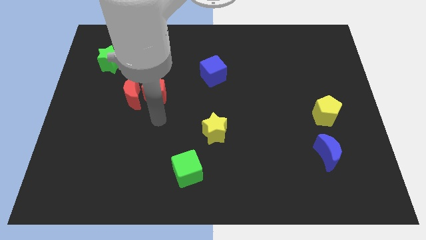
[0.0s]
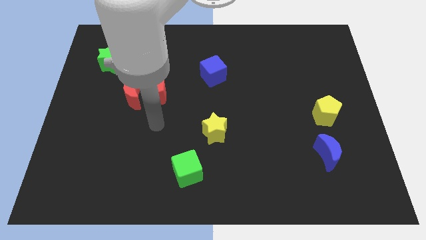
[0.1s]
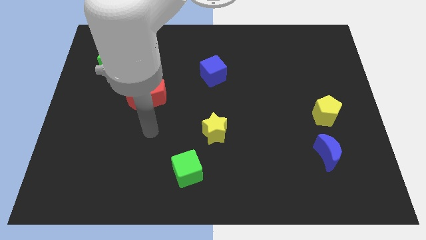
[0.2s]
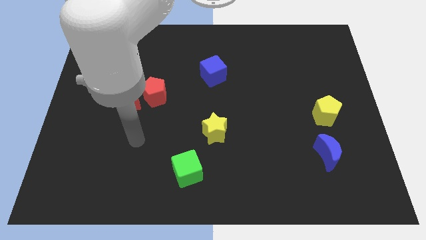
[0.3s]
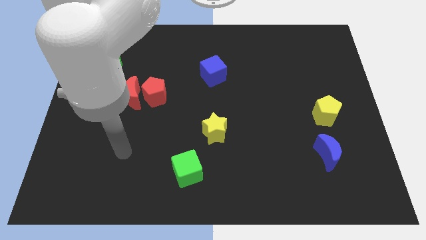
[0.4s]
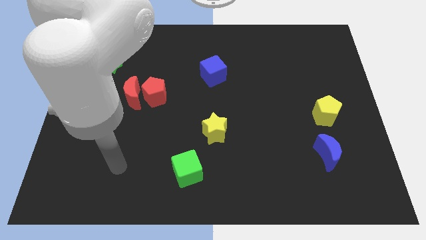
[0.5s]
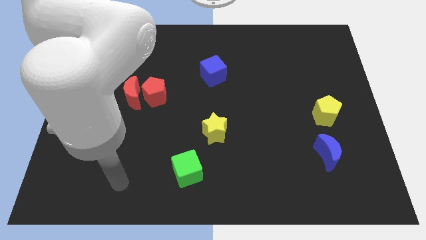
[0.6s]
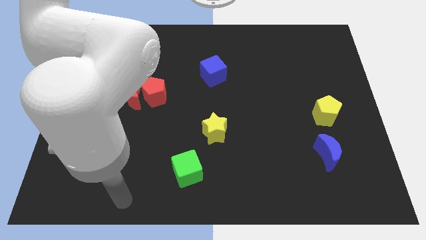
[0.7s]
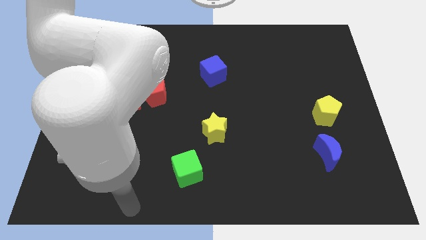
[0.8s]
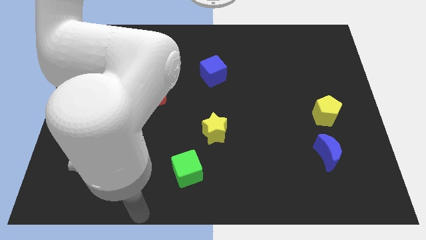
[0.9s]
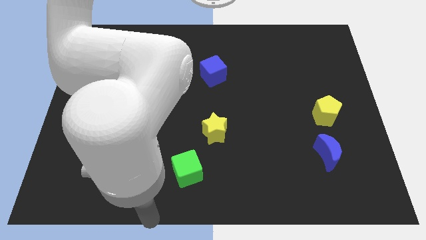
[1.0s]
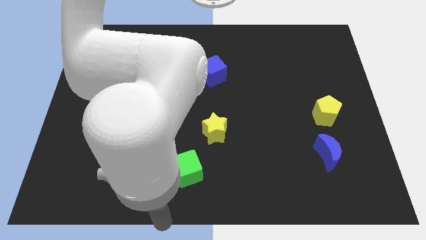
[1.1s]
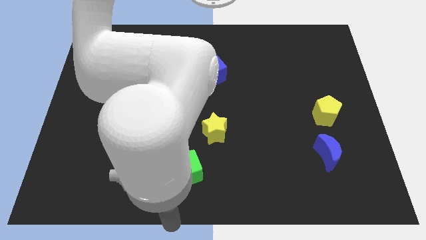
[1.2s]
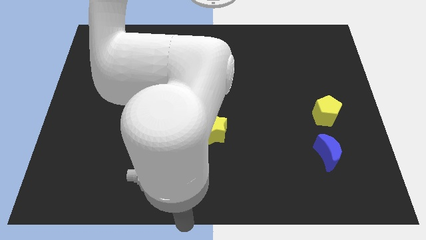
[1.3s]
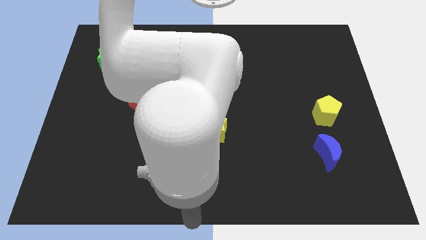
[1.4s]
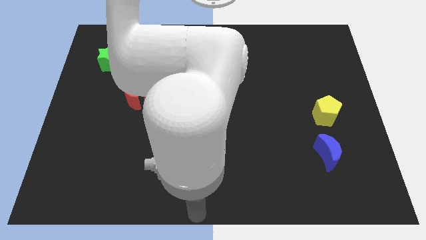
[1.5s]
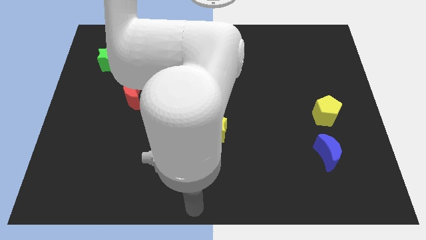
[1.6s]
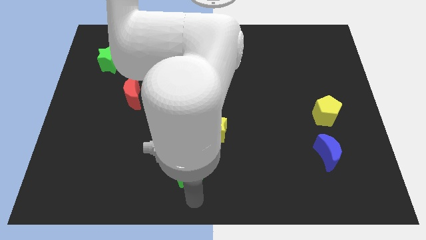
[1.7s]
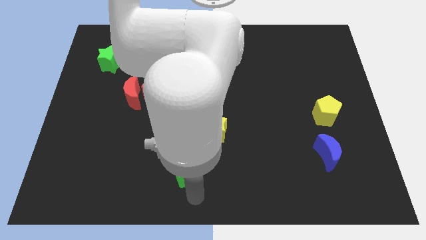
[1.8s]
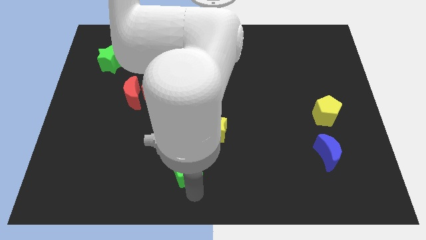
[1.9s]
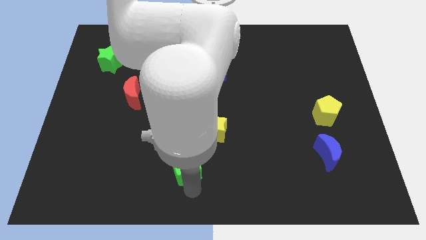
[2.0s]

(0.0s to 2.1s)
move the green cube to the bottom left of the yellow star

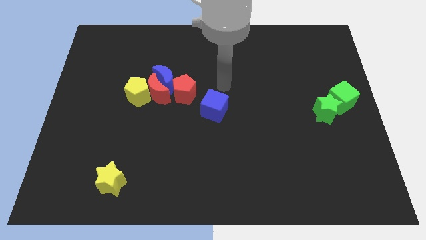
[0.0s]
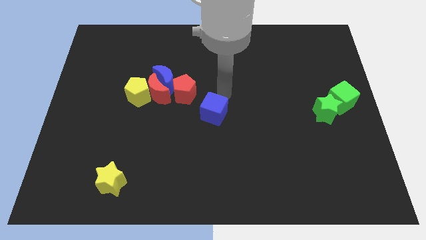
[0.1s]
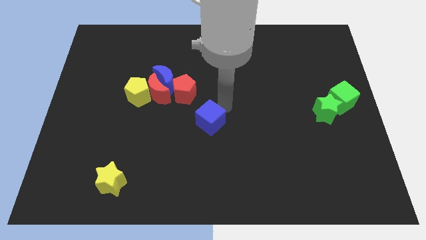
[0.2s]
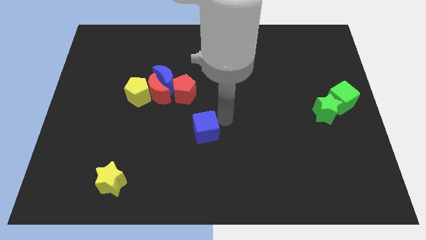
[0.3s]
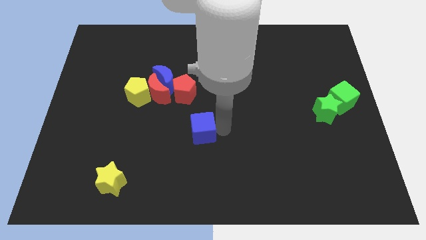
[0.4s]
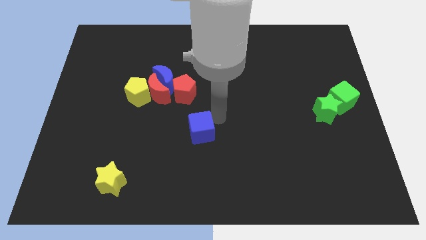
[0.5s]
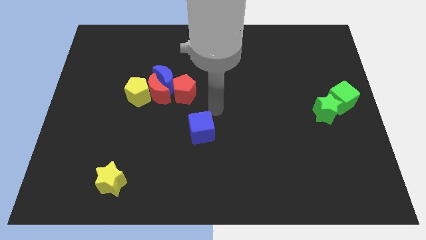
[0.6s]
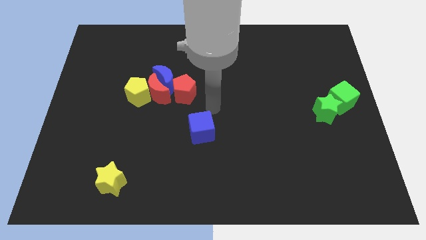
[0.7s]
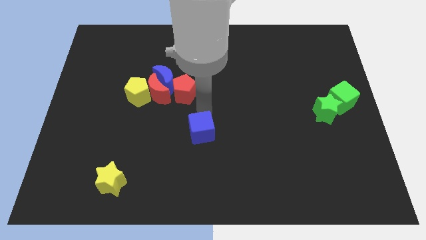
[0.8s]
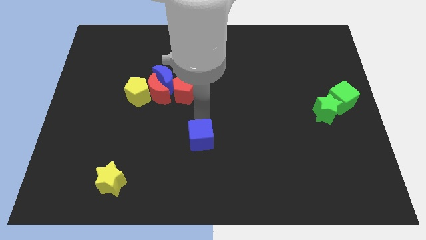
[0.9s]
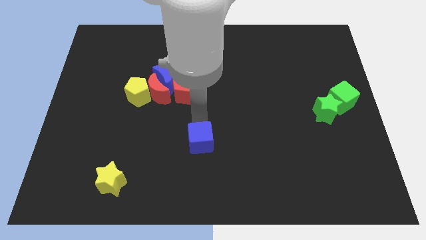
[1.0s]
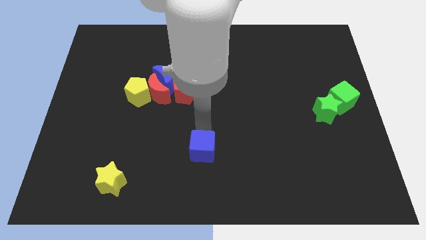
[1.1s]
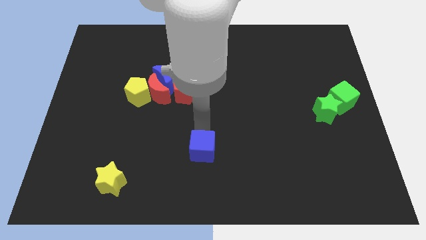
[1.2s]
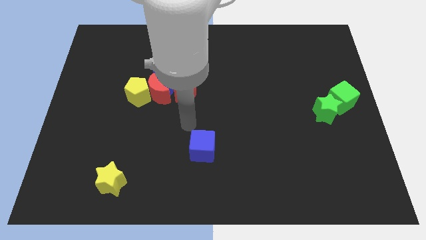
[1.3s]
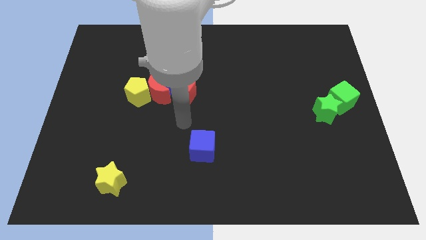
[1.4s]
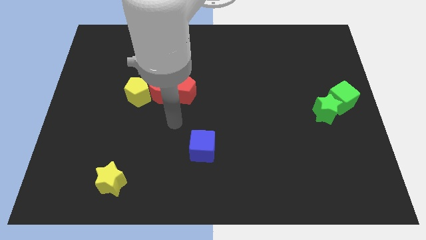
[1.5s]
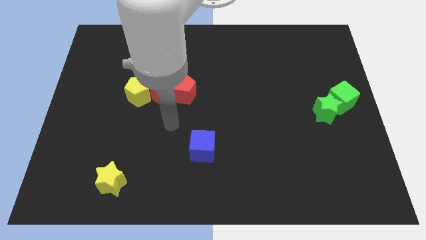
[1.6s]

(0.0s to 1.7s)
push the blue cube parallel to the bottom of the red pentagon

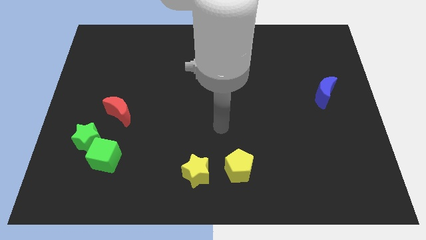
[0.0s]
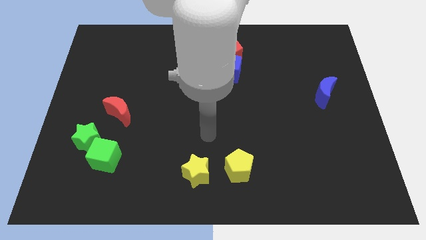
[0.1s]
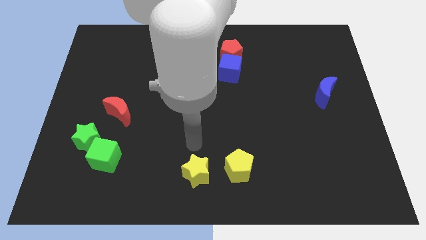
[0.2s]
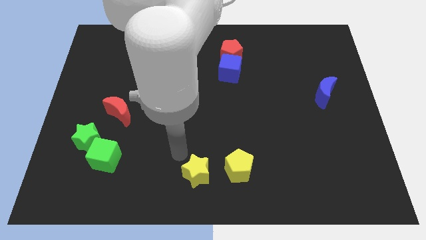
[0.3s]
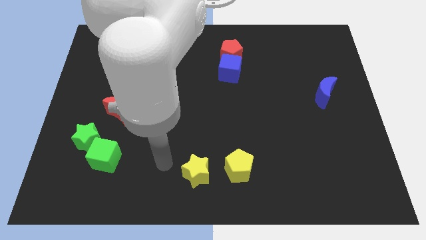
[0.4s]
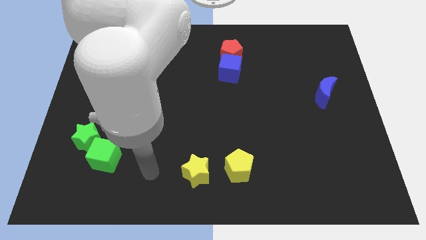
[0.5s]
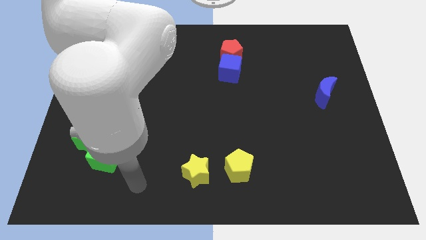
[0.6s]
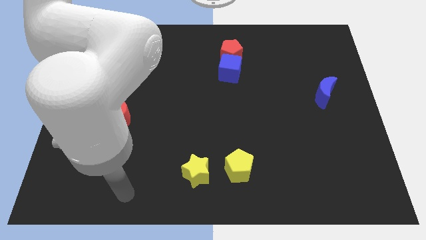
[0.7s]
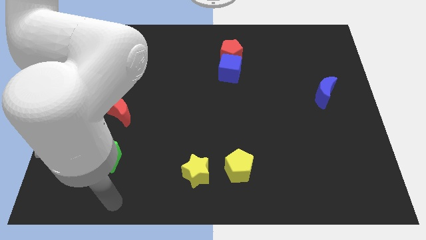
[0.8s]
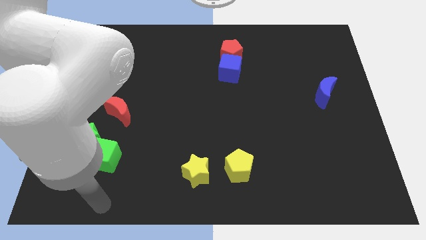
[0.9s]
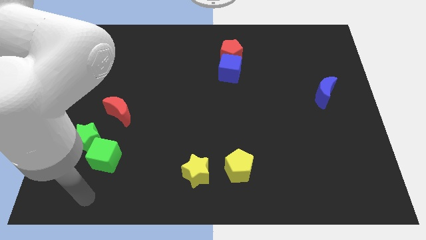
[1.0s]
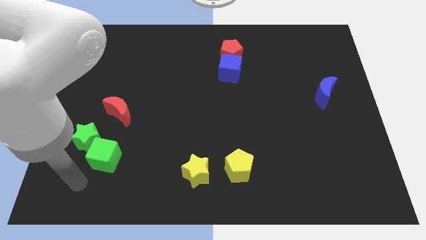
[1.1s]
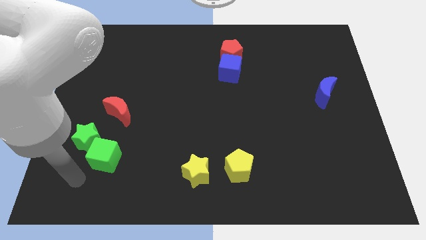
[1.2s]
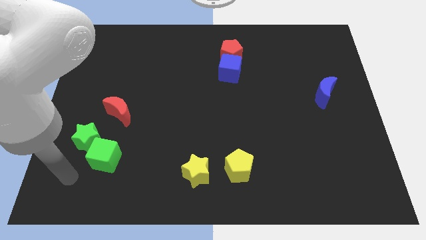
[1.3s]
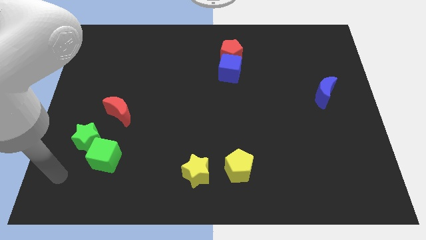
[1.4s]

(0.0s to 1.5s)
point your hand to the bottom left of the green cube

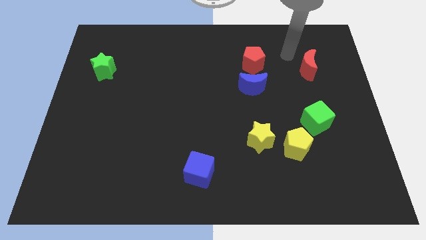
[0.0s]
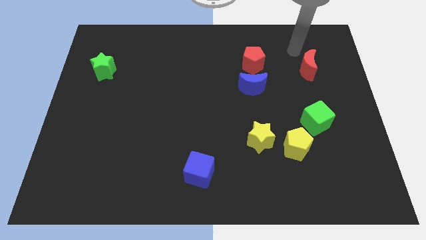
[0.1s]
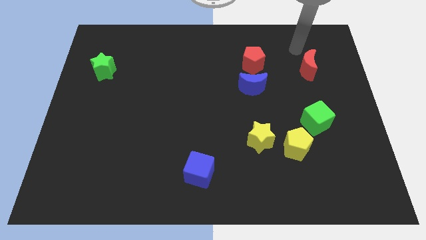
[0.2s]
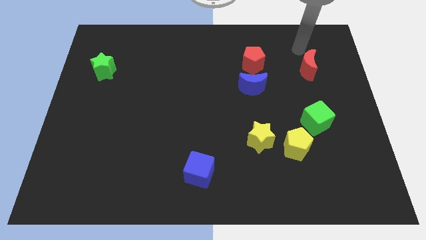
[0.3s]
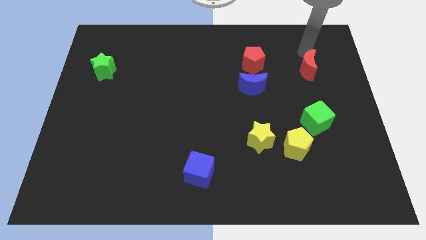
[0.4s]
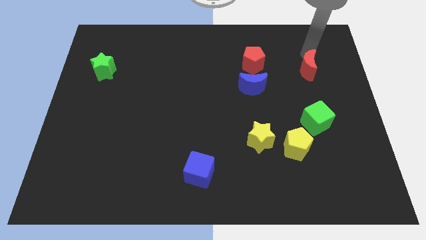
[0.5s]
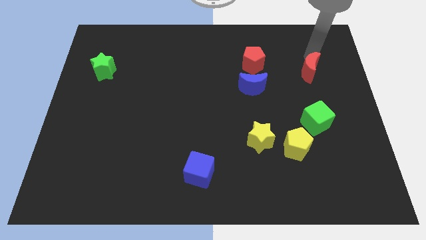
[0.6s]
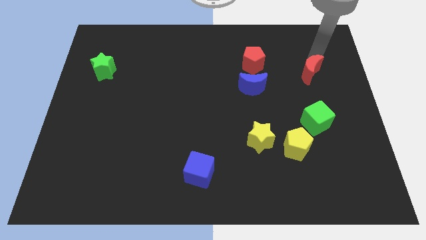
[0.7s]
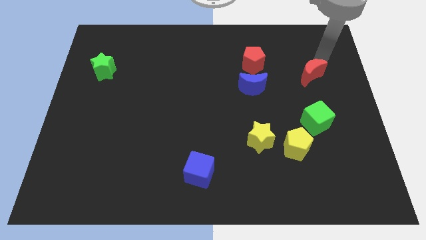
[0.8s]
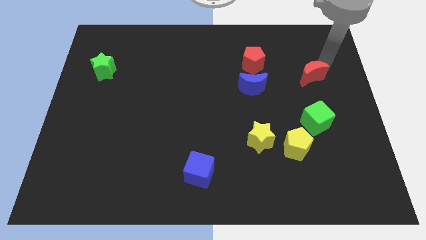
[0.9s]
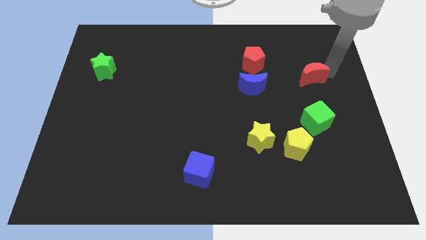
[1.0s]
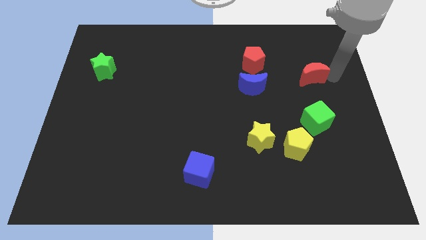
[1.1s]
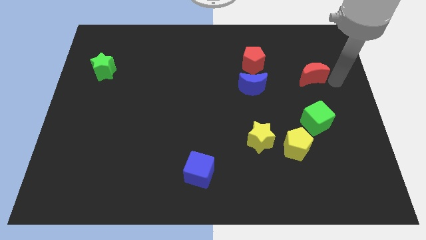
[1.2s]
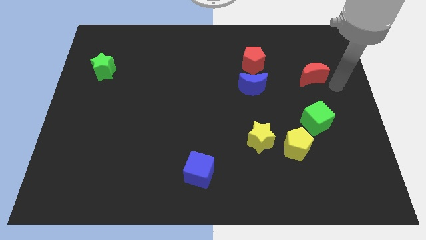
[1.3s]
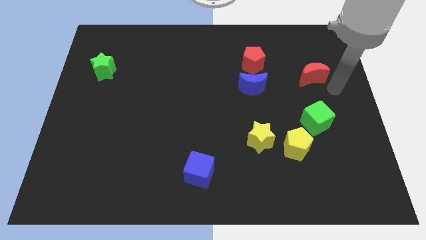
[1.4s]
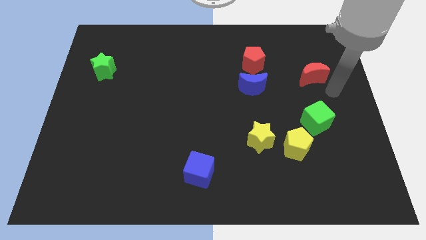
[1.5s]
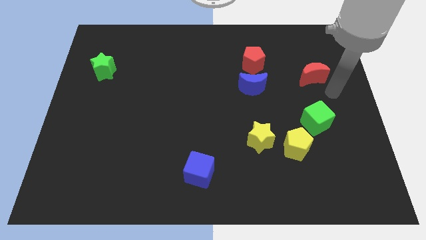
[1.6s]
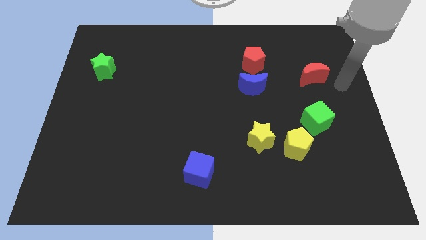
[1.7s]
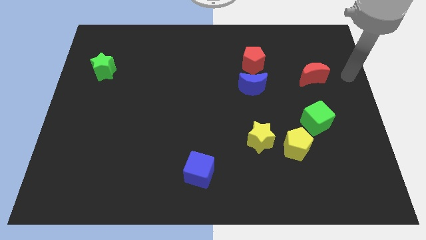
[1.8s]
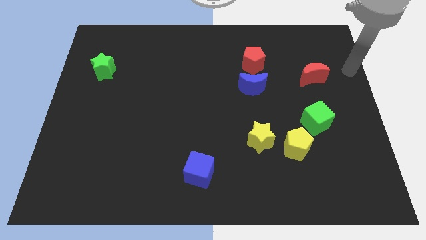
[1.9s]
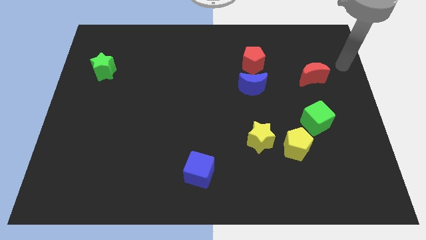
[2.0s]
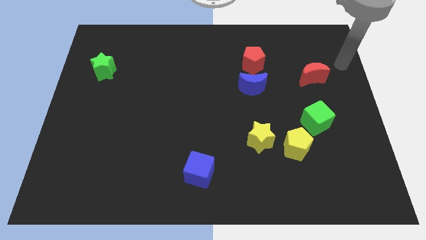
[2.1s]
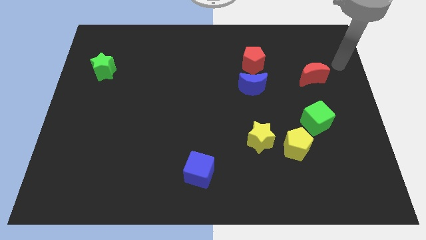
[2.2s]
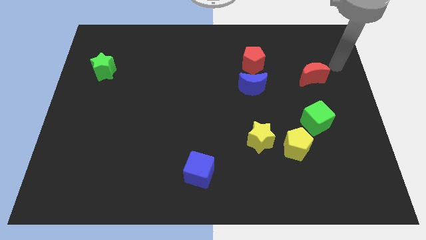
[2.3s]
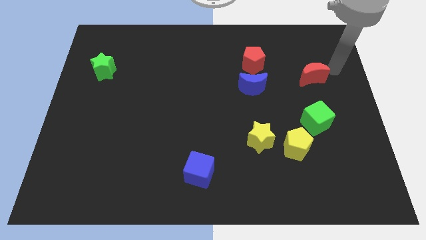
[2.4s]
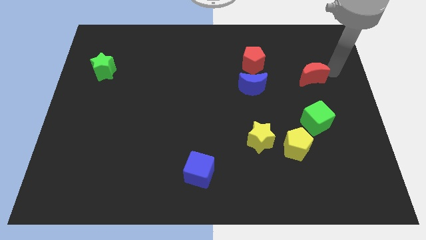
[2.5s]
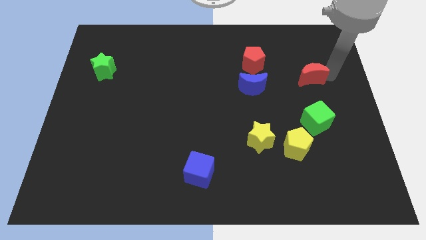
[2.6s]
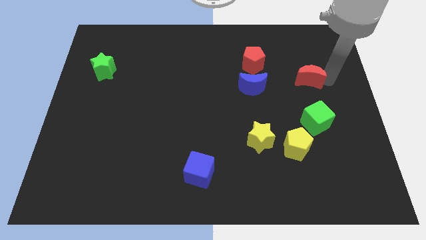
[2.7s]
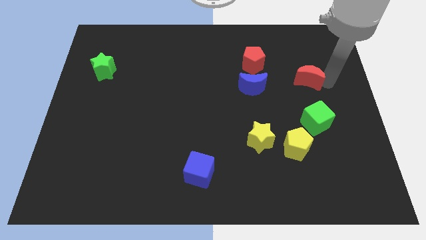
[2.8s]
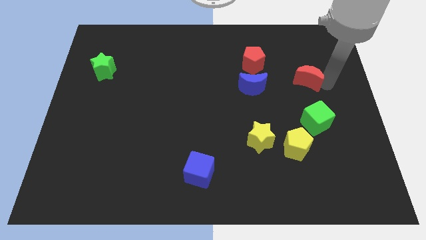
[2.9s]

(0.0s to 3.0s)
push the red moon closer to the green cube

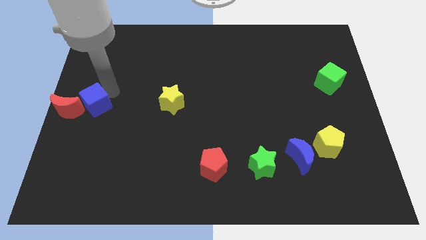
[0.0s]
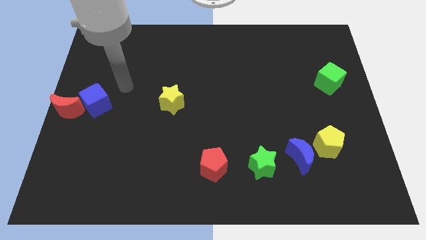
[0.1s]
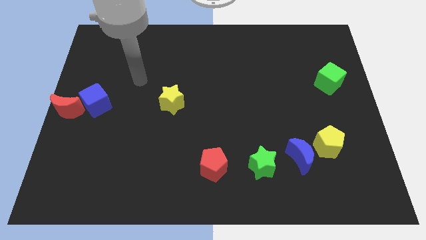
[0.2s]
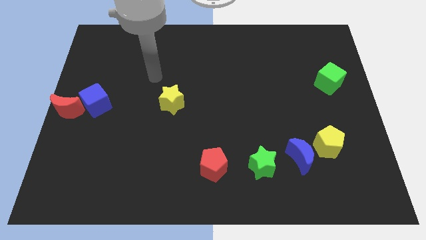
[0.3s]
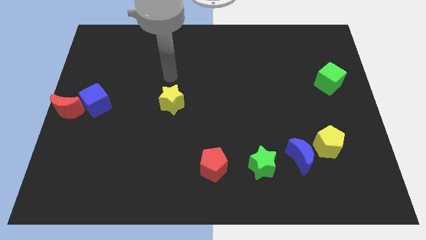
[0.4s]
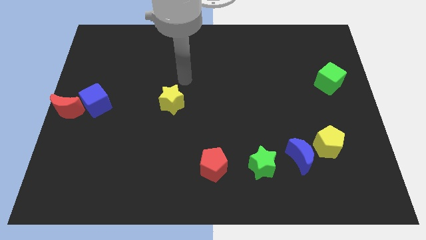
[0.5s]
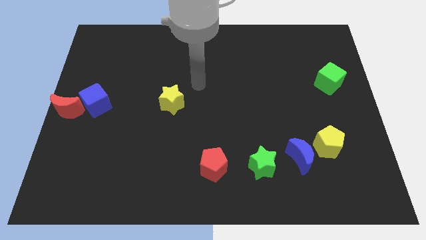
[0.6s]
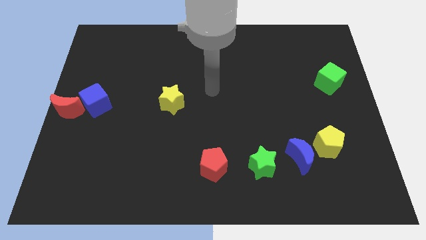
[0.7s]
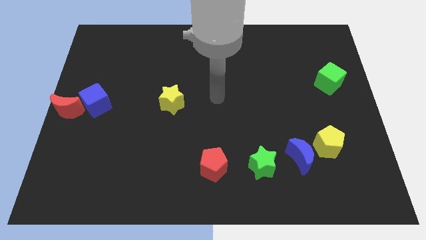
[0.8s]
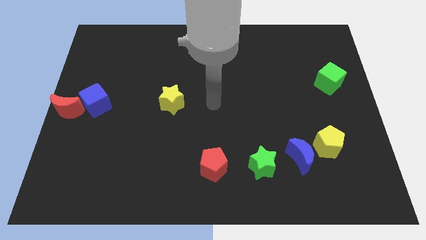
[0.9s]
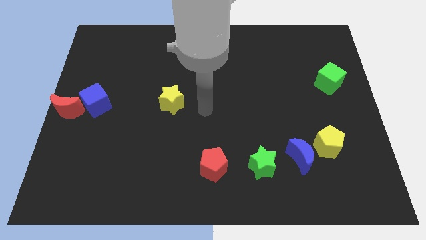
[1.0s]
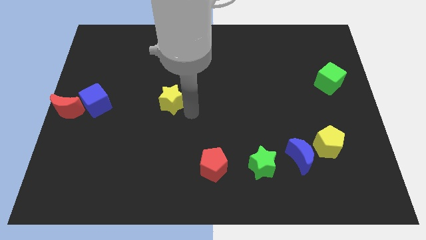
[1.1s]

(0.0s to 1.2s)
move your hand to the center
